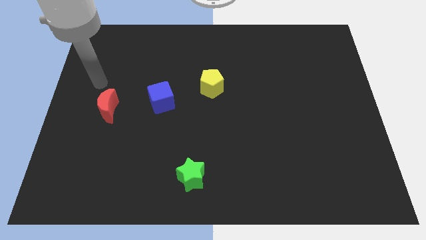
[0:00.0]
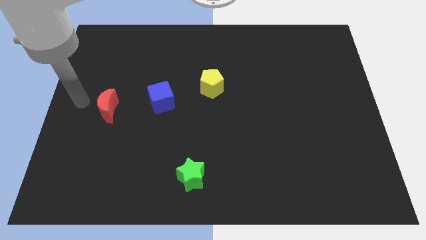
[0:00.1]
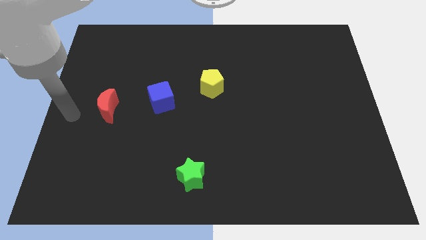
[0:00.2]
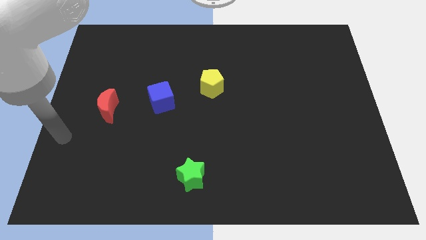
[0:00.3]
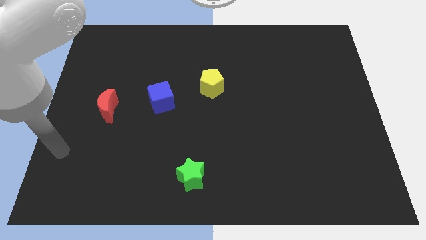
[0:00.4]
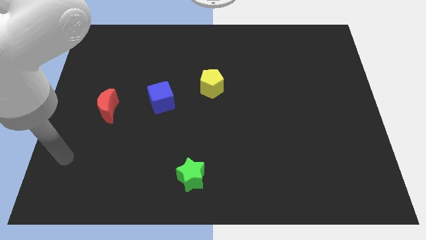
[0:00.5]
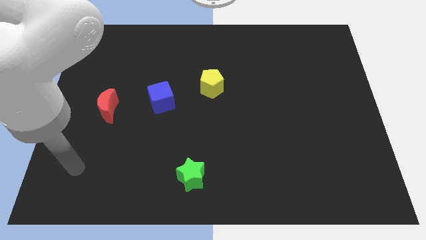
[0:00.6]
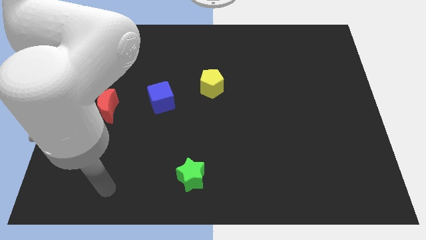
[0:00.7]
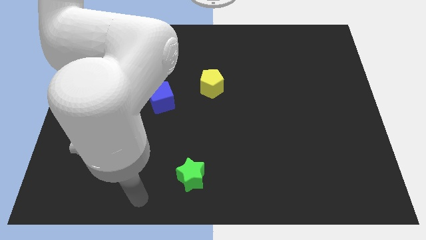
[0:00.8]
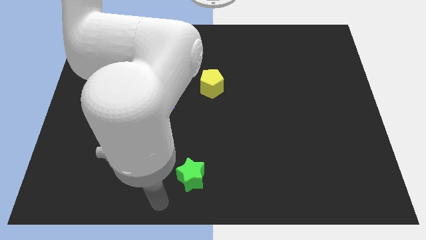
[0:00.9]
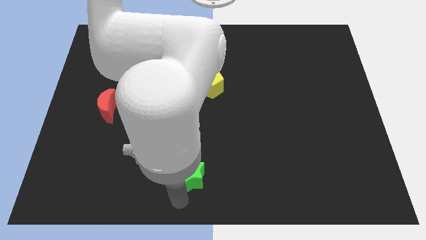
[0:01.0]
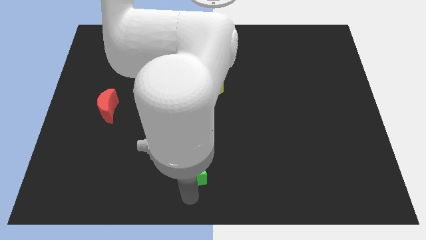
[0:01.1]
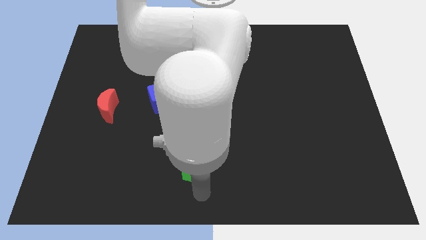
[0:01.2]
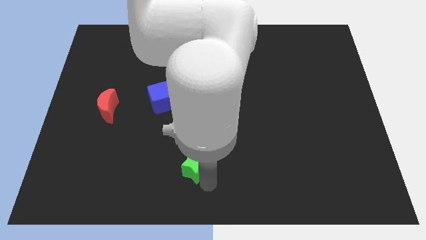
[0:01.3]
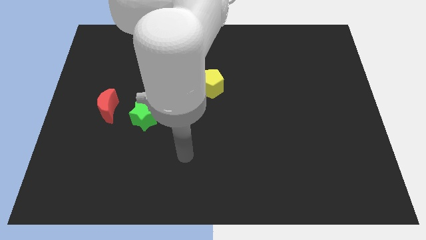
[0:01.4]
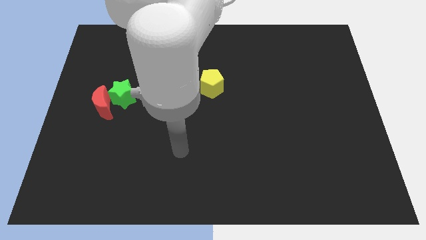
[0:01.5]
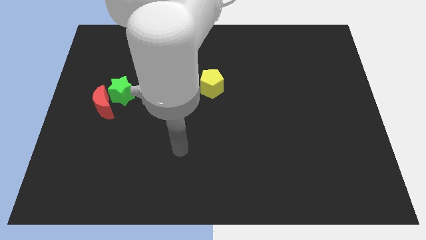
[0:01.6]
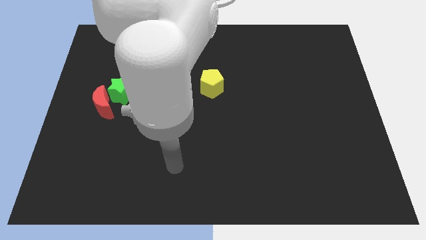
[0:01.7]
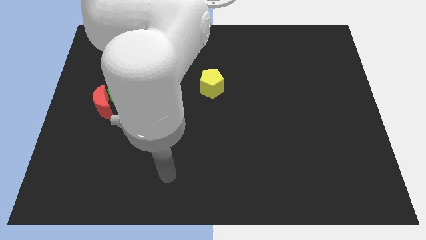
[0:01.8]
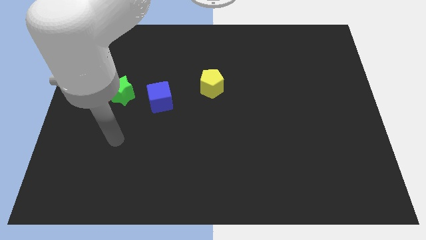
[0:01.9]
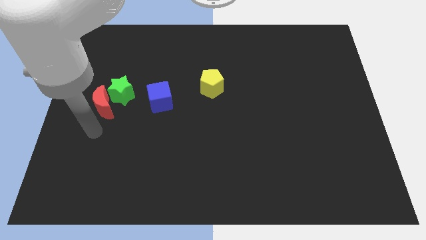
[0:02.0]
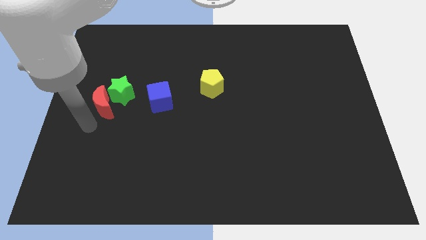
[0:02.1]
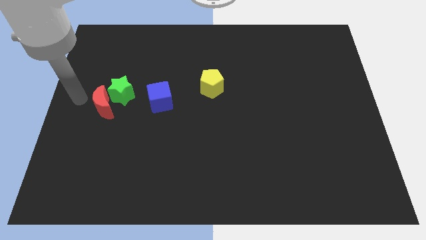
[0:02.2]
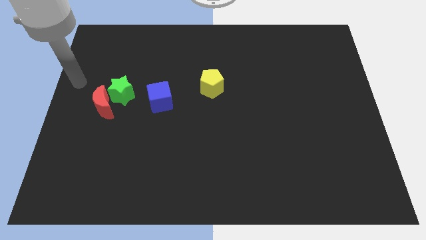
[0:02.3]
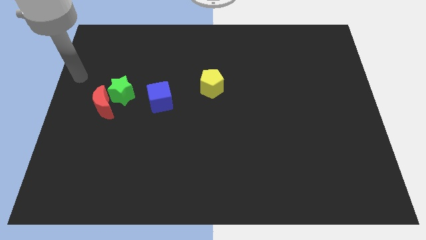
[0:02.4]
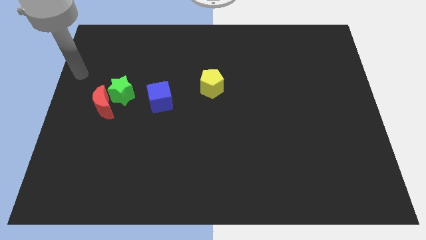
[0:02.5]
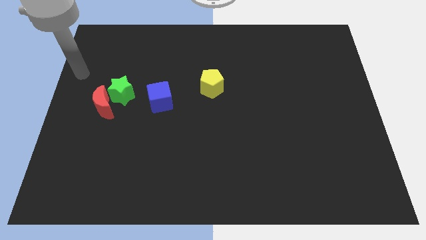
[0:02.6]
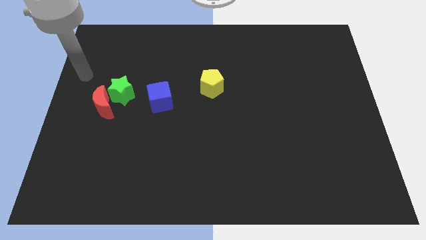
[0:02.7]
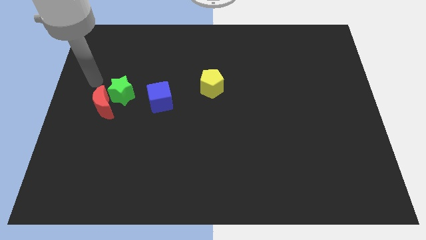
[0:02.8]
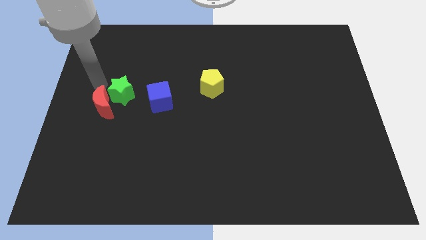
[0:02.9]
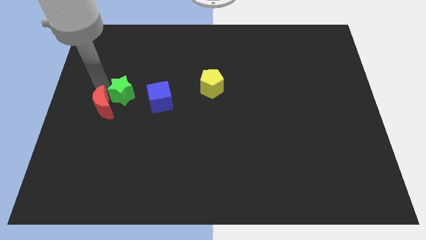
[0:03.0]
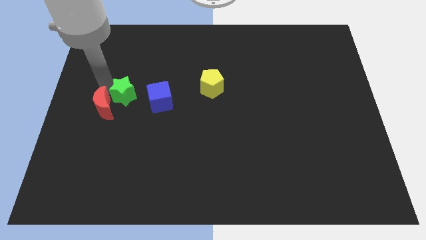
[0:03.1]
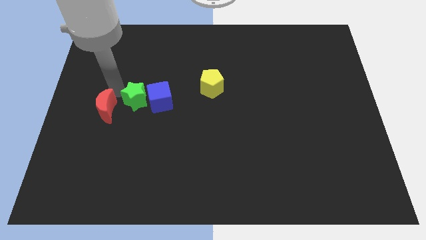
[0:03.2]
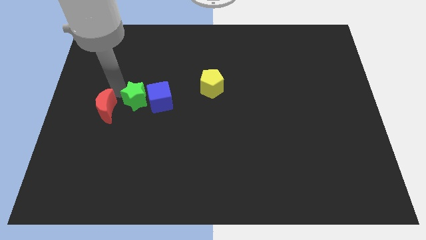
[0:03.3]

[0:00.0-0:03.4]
move the green star close to the blue cube

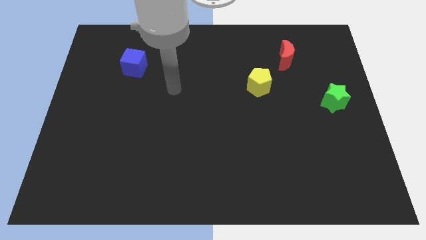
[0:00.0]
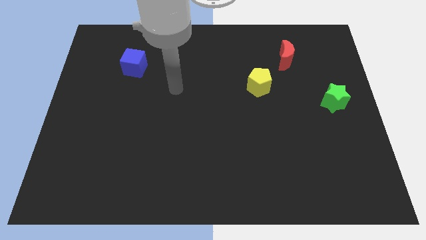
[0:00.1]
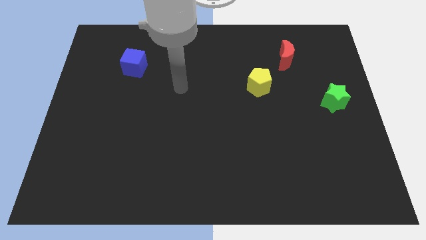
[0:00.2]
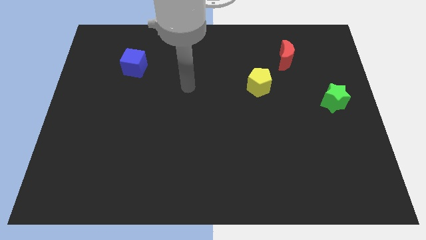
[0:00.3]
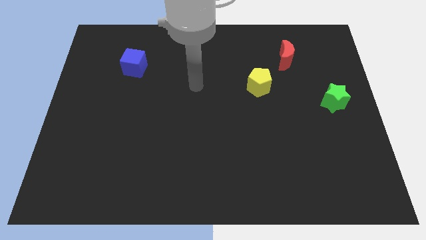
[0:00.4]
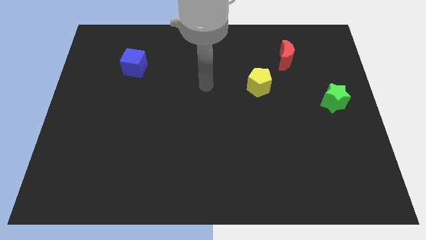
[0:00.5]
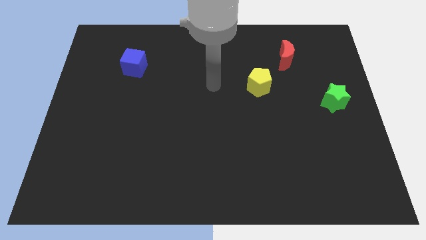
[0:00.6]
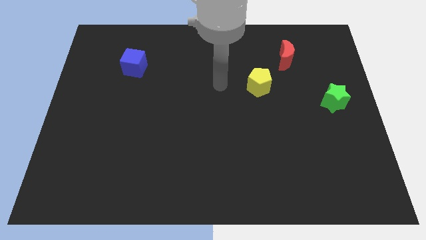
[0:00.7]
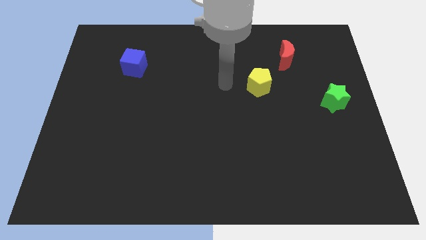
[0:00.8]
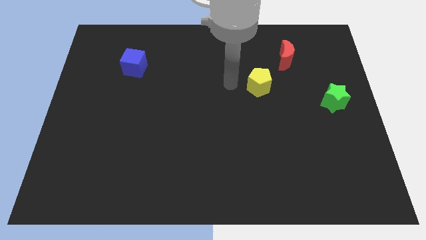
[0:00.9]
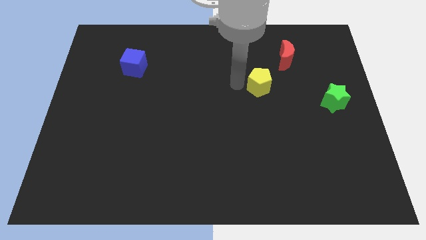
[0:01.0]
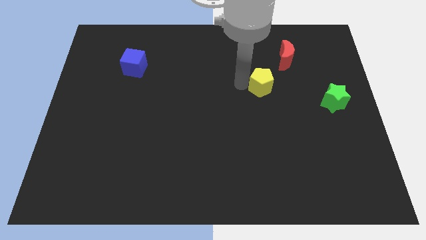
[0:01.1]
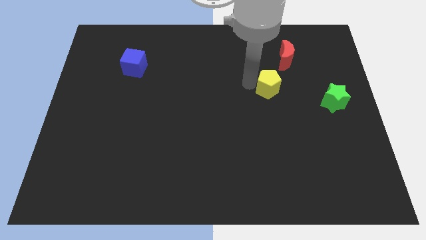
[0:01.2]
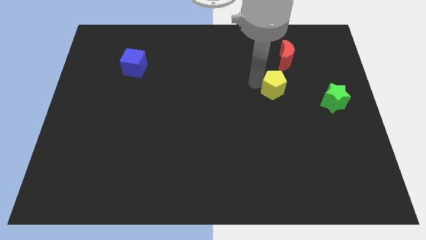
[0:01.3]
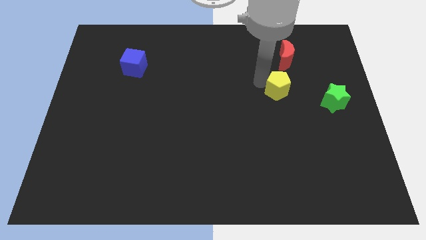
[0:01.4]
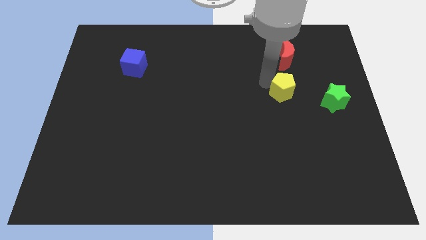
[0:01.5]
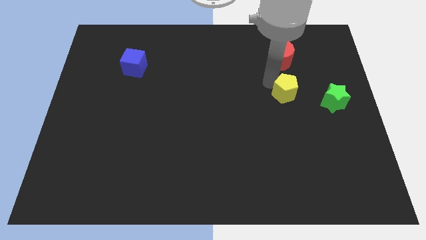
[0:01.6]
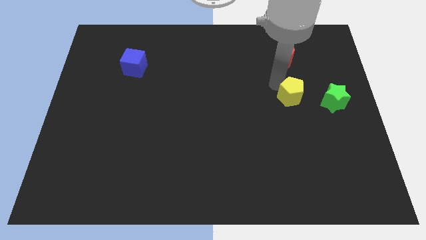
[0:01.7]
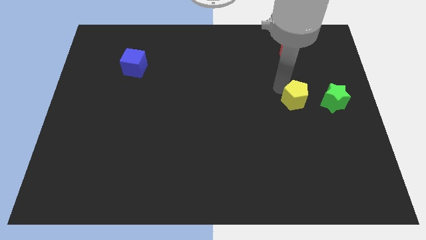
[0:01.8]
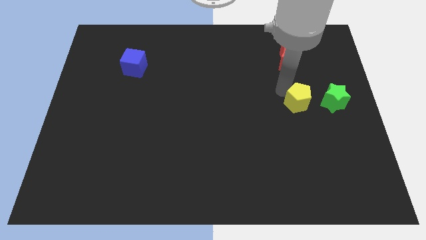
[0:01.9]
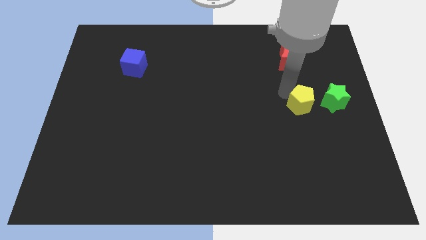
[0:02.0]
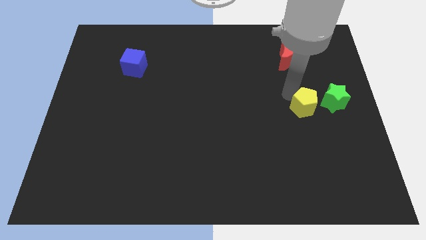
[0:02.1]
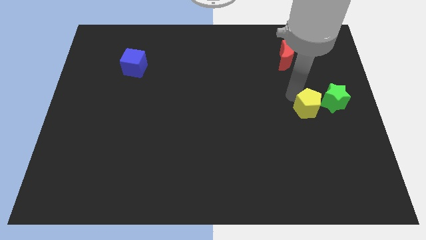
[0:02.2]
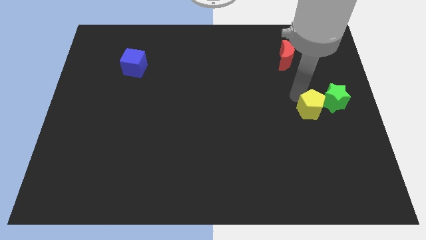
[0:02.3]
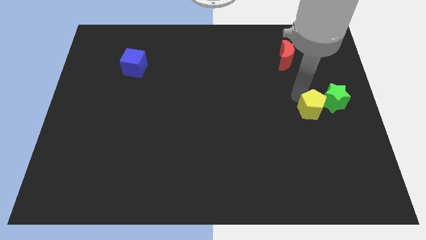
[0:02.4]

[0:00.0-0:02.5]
slide the pentagon to the green block

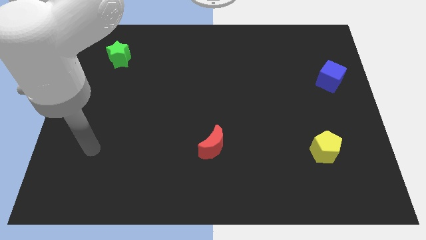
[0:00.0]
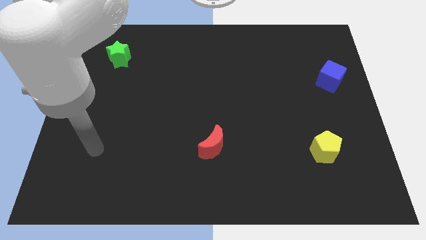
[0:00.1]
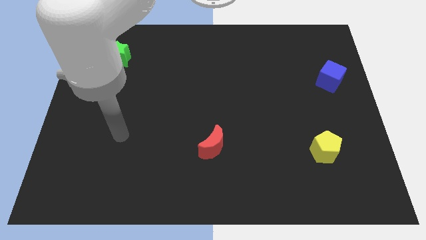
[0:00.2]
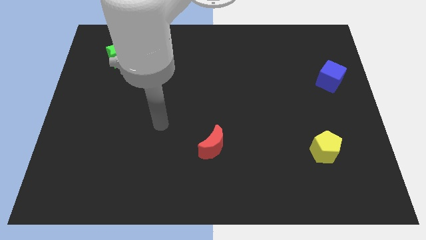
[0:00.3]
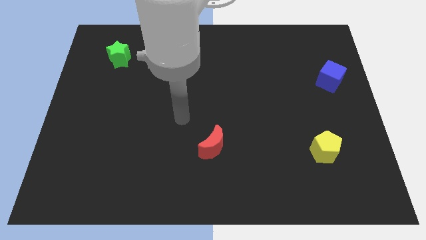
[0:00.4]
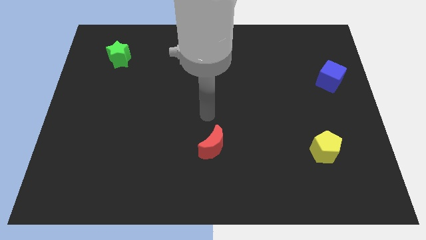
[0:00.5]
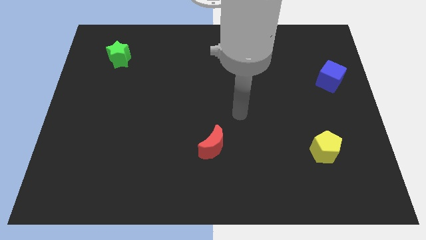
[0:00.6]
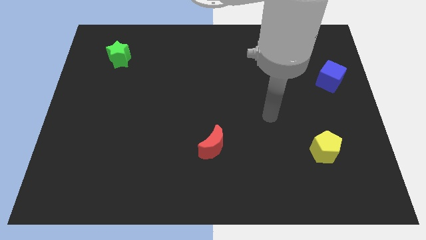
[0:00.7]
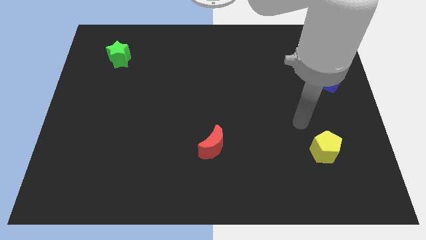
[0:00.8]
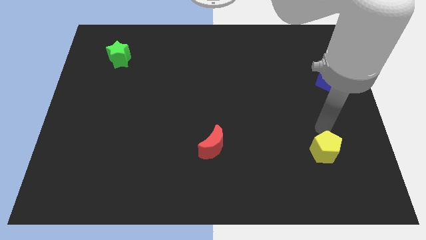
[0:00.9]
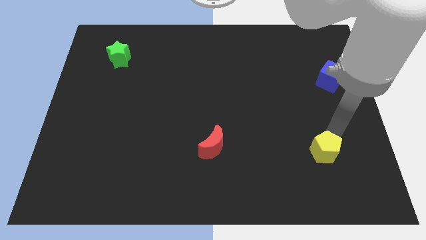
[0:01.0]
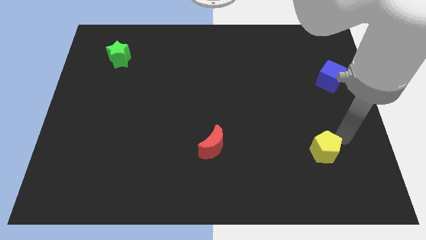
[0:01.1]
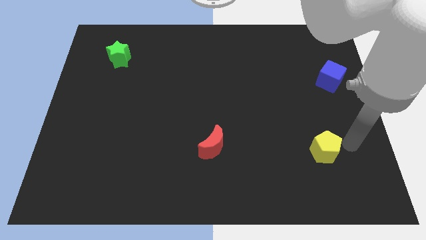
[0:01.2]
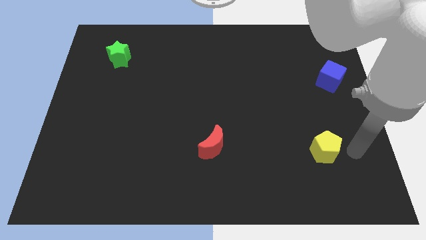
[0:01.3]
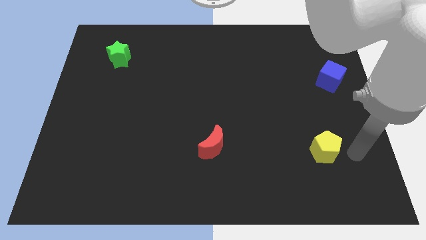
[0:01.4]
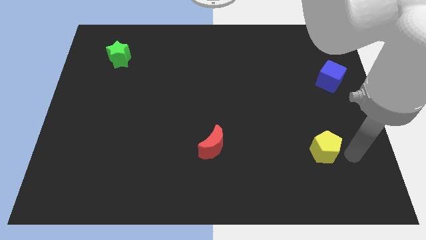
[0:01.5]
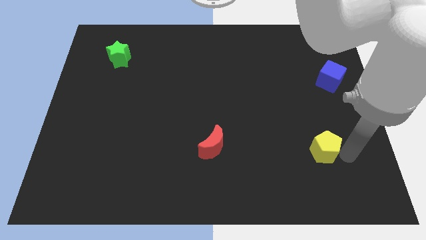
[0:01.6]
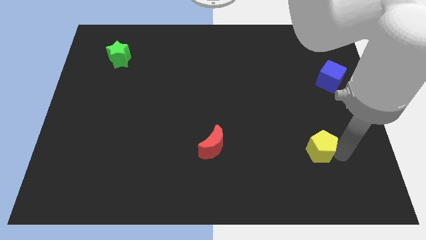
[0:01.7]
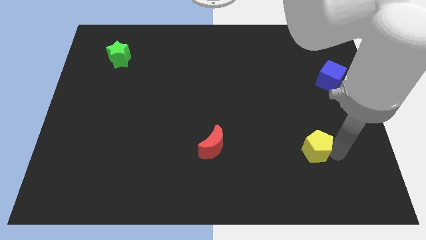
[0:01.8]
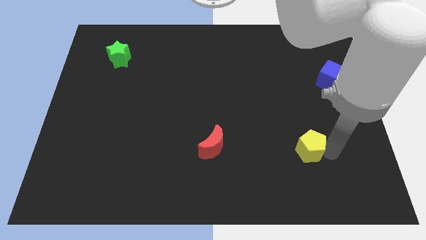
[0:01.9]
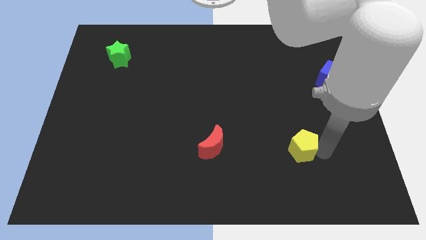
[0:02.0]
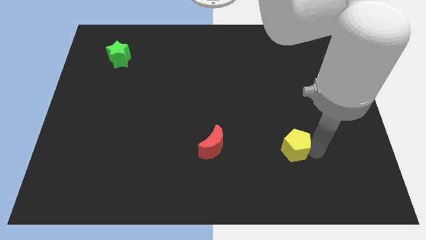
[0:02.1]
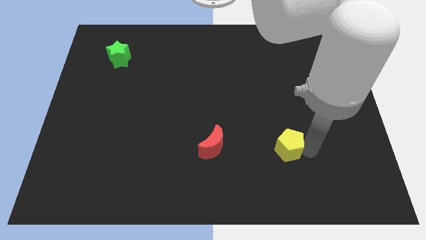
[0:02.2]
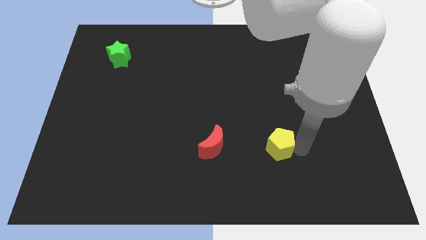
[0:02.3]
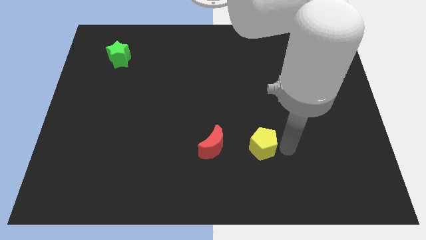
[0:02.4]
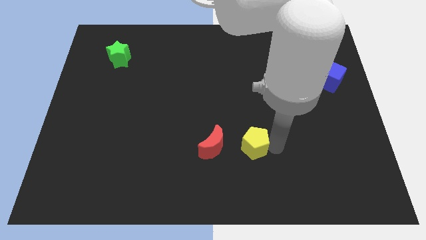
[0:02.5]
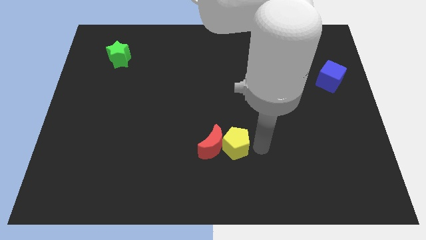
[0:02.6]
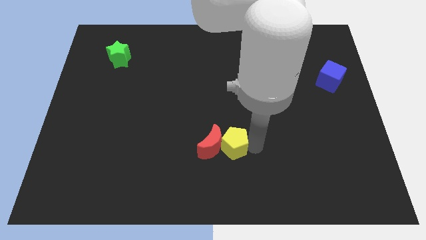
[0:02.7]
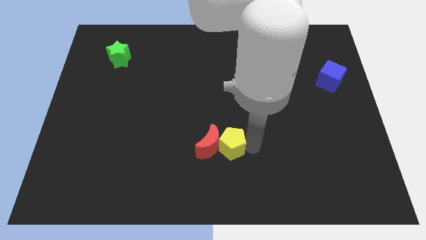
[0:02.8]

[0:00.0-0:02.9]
put the pentagon next to the red moon

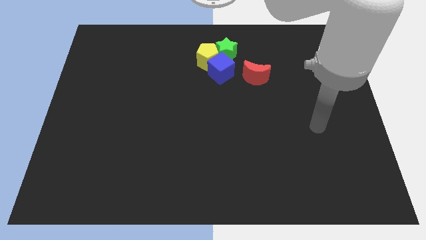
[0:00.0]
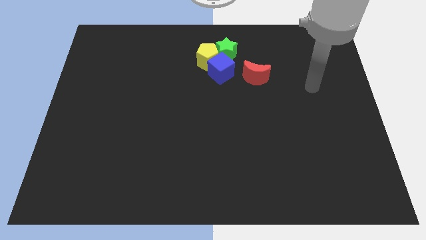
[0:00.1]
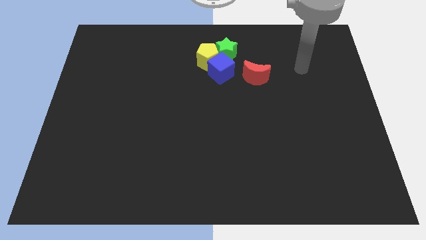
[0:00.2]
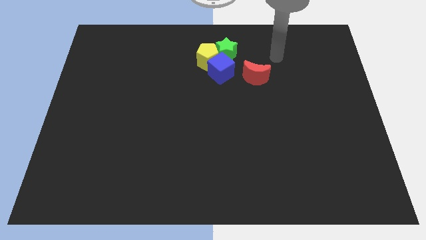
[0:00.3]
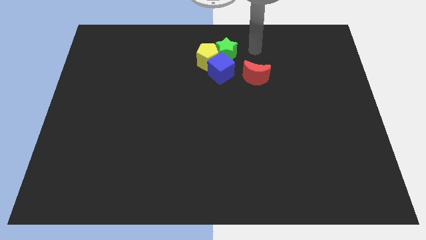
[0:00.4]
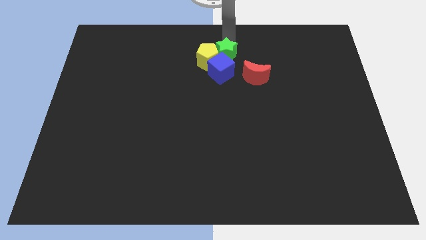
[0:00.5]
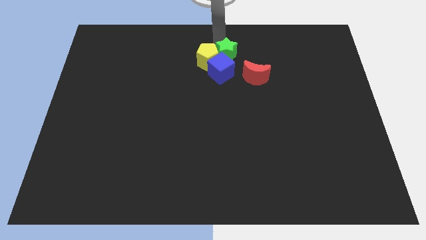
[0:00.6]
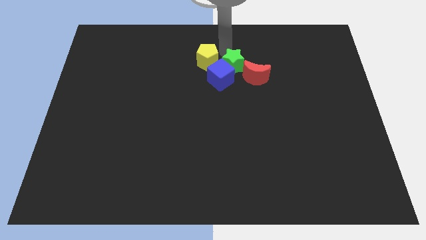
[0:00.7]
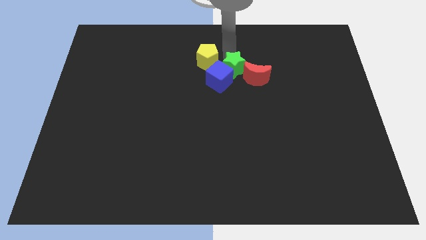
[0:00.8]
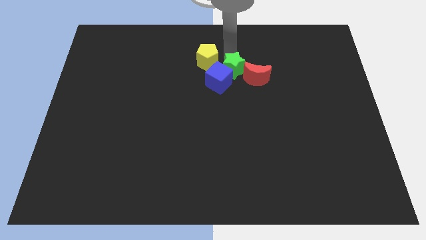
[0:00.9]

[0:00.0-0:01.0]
push the star to the red block
